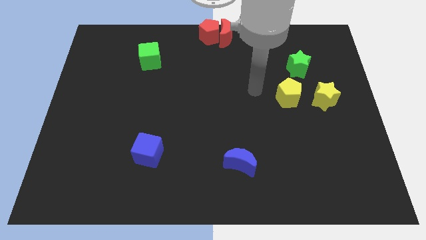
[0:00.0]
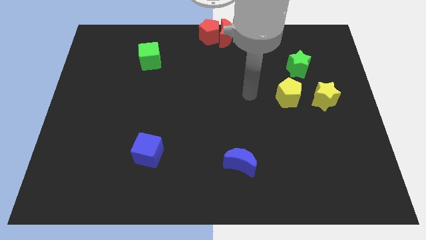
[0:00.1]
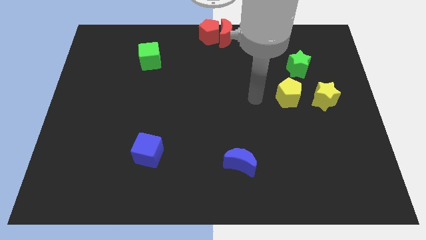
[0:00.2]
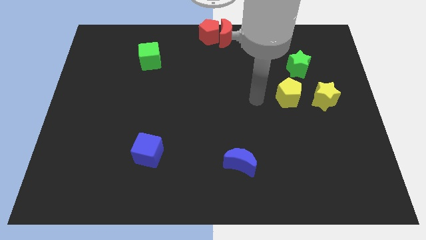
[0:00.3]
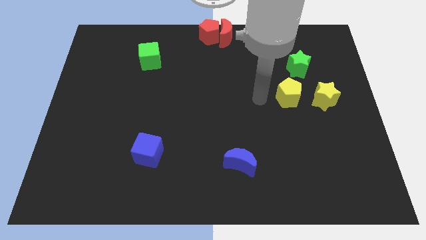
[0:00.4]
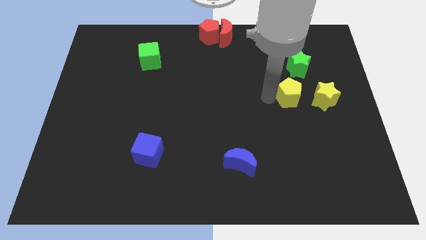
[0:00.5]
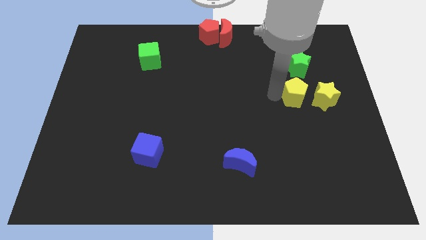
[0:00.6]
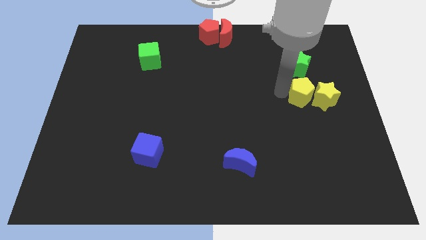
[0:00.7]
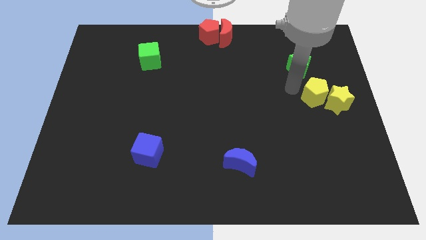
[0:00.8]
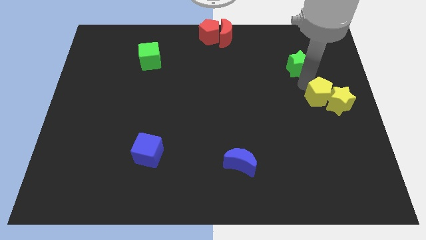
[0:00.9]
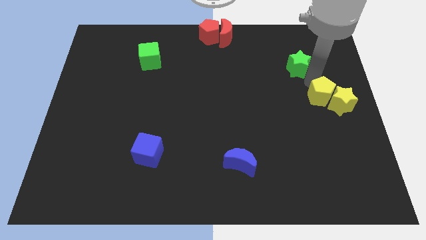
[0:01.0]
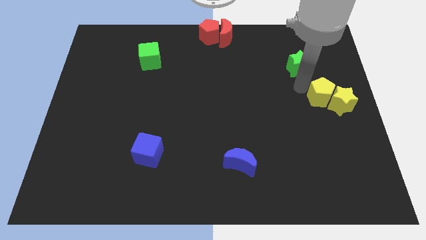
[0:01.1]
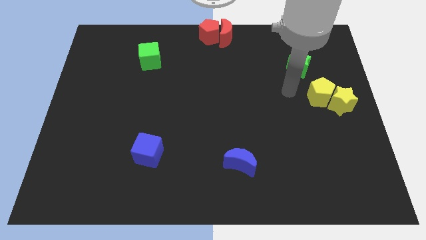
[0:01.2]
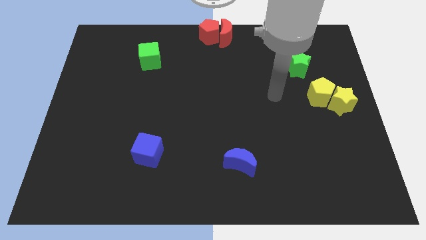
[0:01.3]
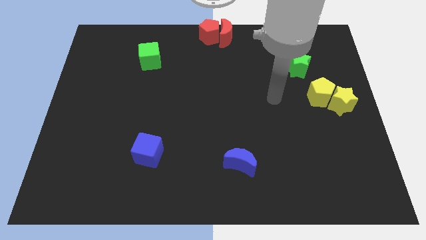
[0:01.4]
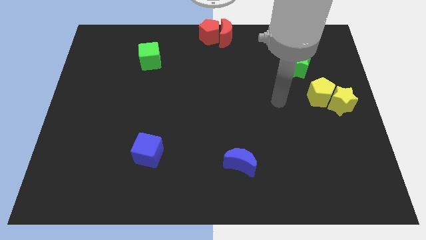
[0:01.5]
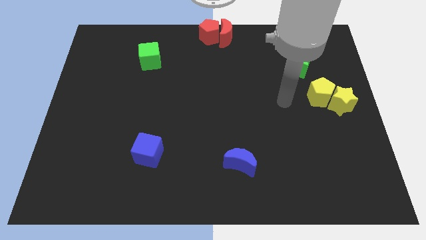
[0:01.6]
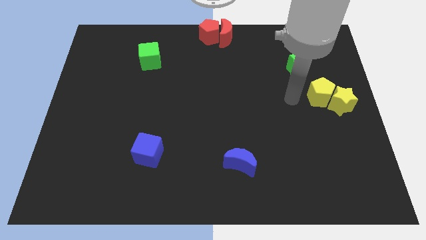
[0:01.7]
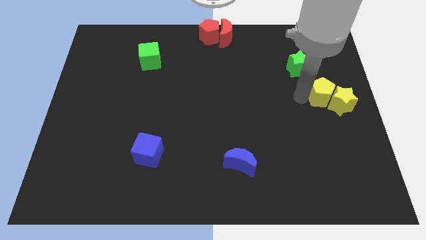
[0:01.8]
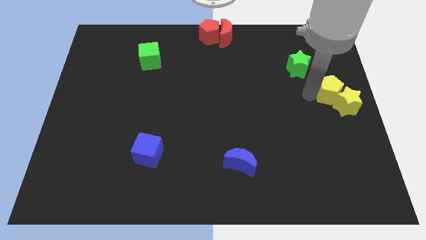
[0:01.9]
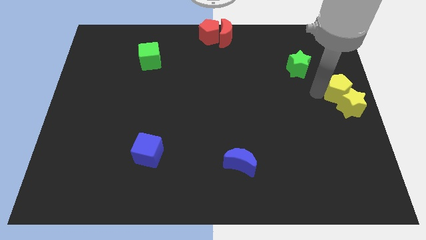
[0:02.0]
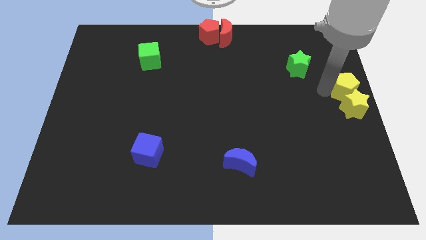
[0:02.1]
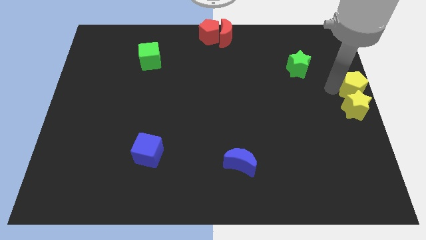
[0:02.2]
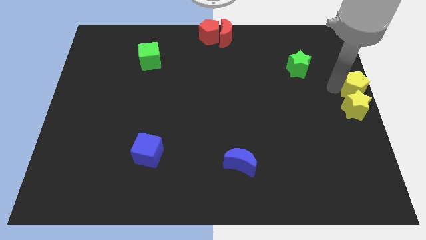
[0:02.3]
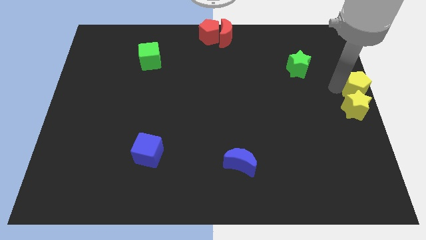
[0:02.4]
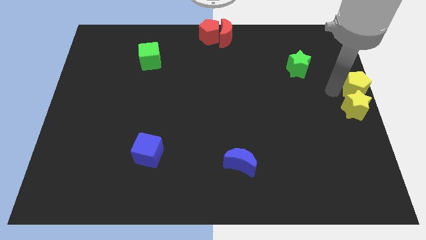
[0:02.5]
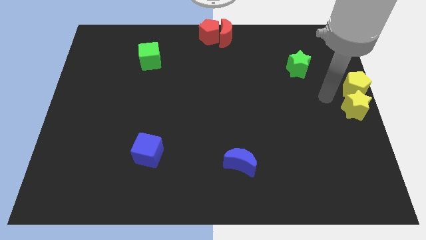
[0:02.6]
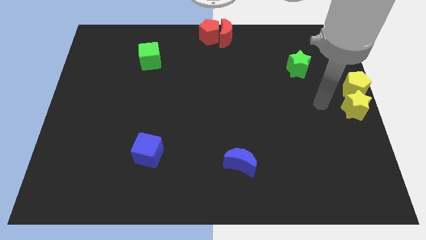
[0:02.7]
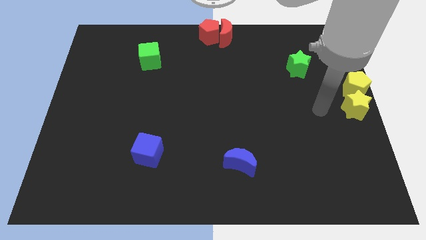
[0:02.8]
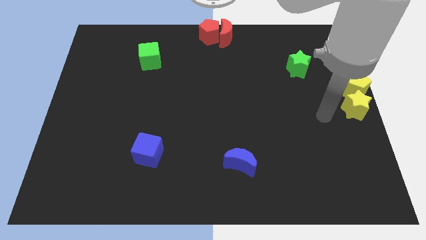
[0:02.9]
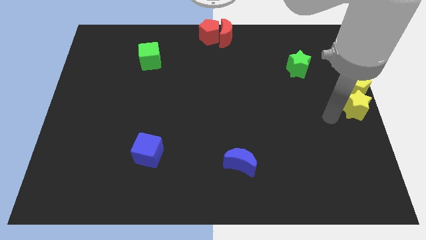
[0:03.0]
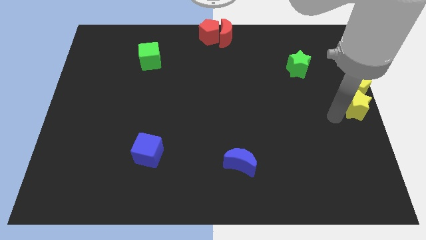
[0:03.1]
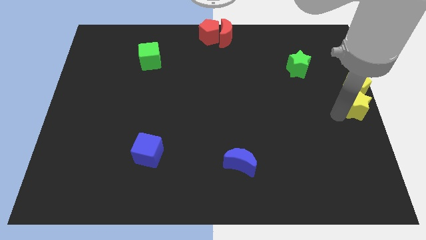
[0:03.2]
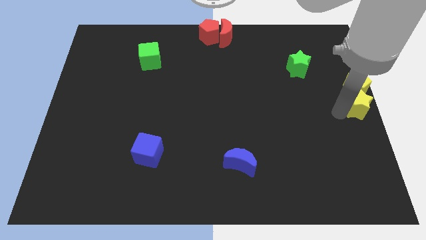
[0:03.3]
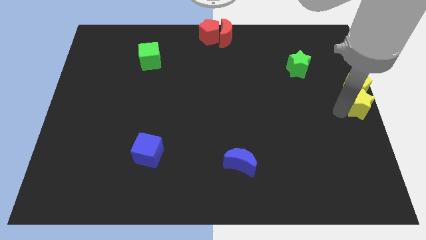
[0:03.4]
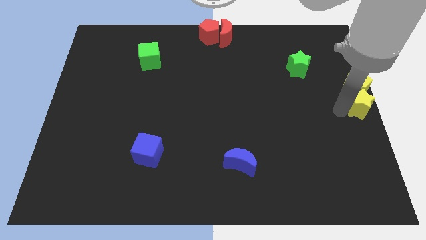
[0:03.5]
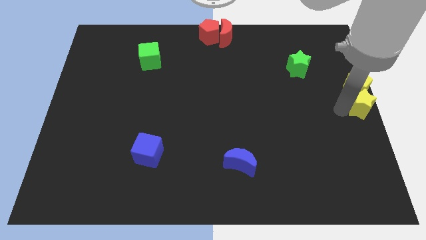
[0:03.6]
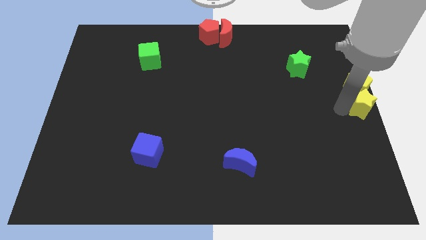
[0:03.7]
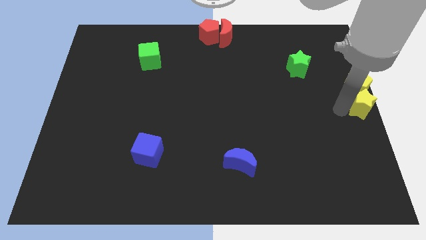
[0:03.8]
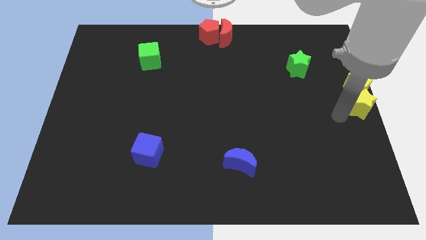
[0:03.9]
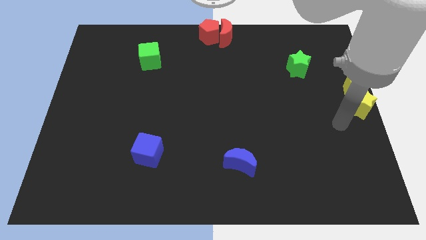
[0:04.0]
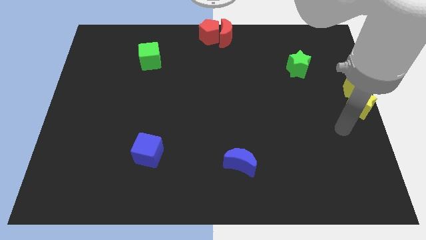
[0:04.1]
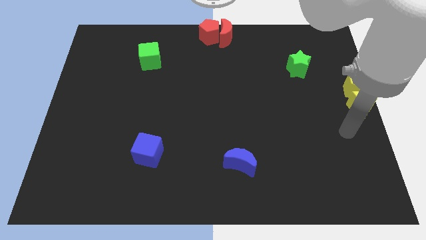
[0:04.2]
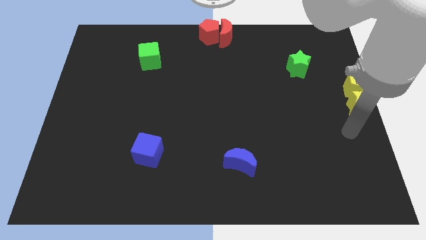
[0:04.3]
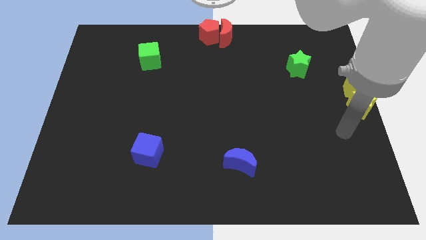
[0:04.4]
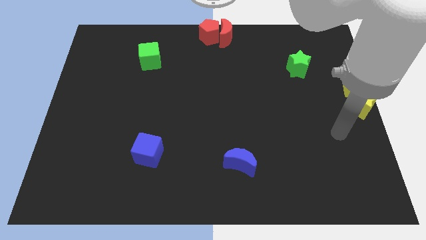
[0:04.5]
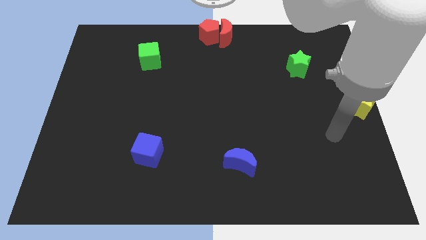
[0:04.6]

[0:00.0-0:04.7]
move the yellow blocks to the right center of the board

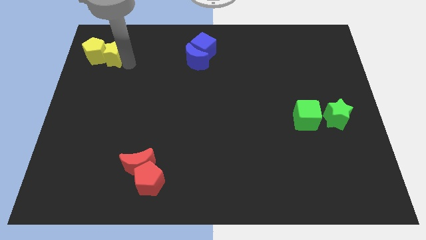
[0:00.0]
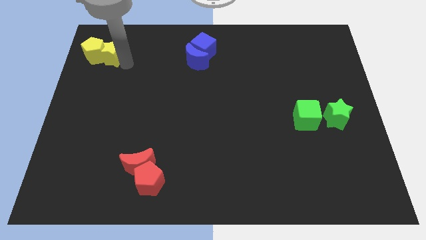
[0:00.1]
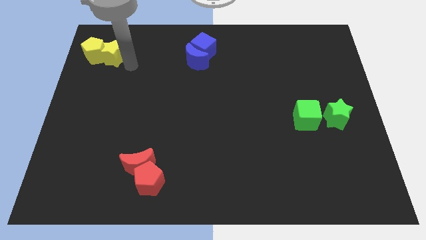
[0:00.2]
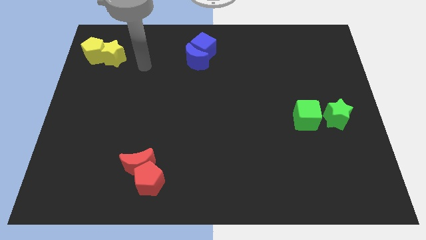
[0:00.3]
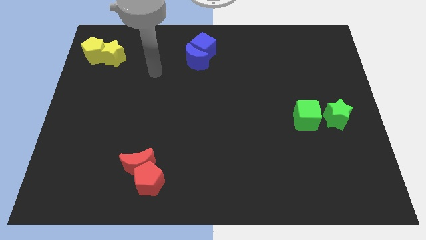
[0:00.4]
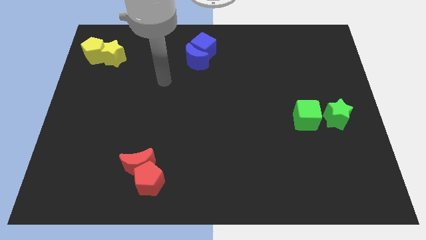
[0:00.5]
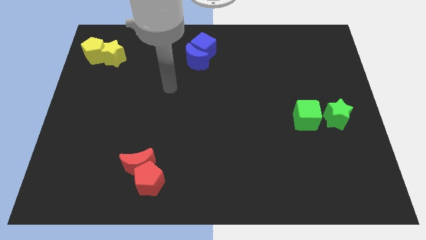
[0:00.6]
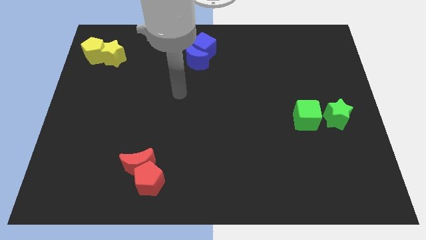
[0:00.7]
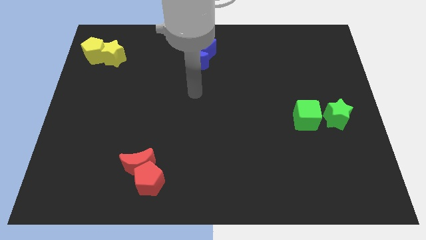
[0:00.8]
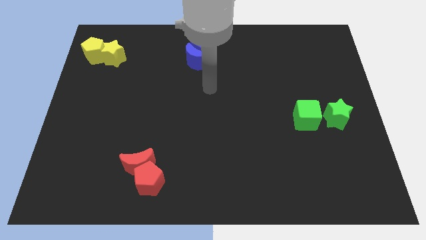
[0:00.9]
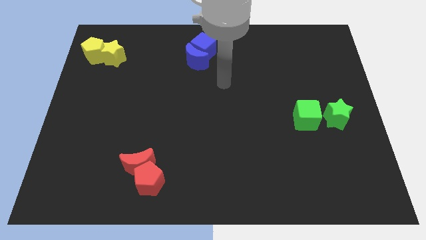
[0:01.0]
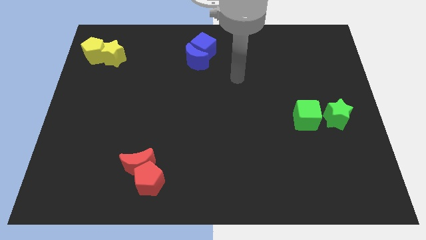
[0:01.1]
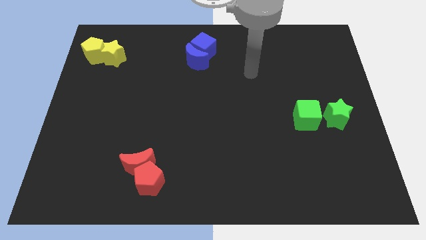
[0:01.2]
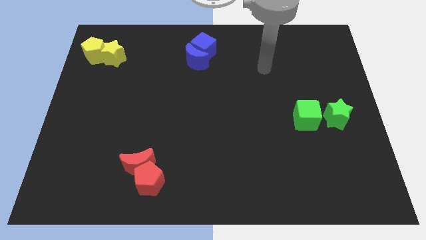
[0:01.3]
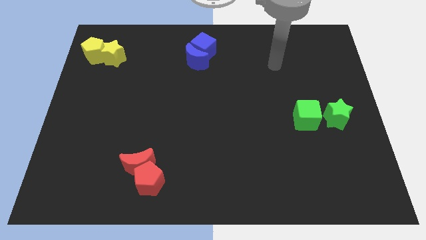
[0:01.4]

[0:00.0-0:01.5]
move away from the yellow star

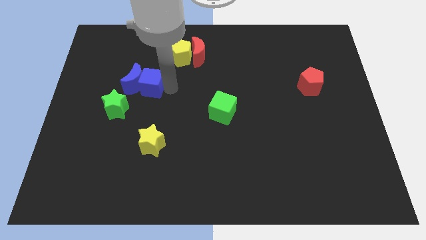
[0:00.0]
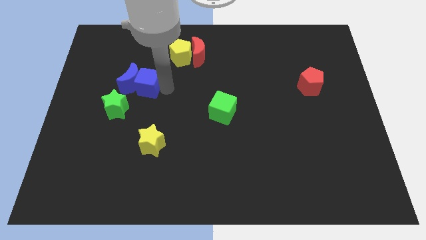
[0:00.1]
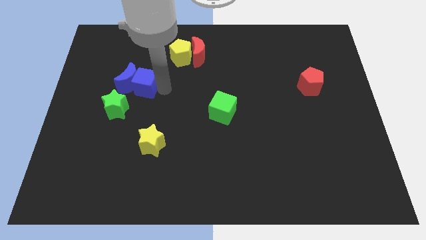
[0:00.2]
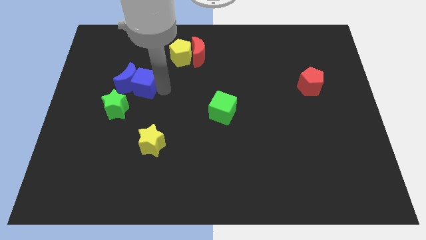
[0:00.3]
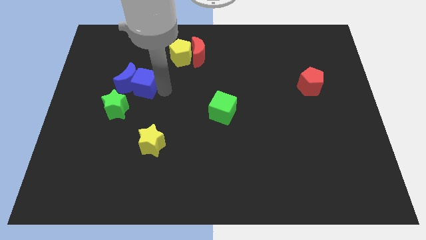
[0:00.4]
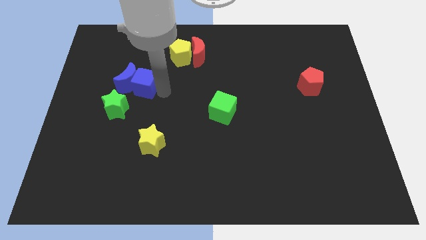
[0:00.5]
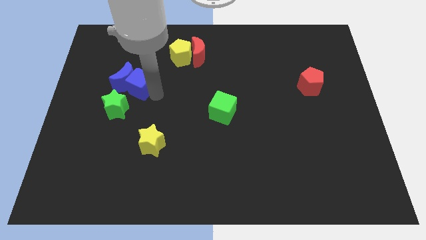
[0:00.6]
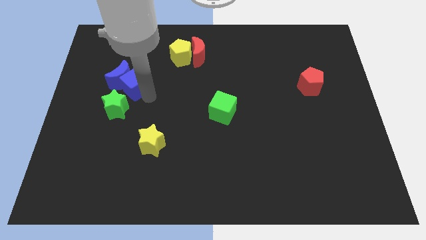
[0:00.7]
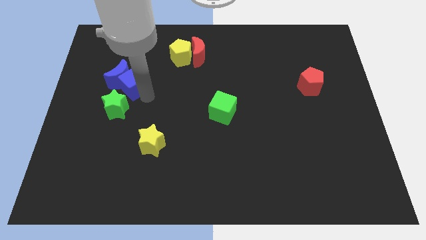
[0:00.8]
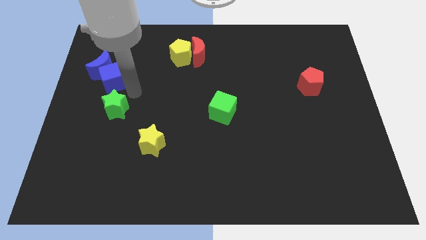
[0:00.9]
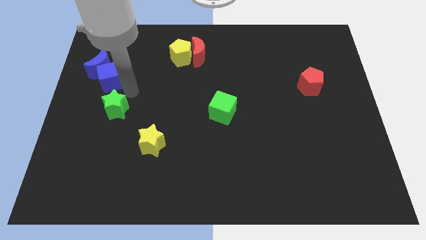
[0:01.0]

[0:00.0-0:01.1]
place blue blocks diagonally to the top left of green star

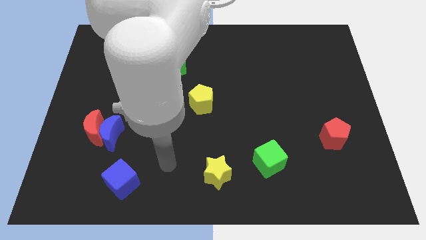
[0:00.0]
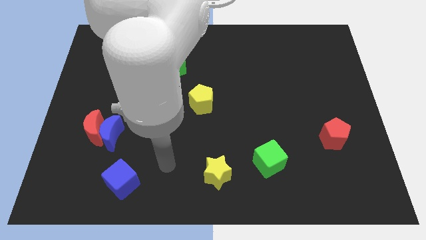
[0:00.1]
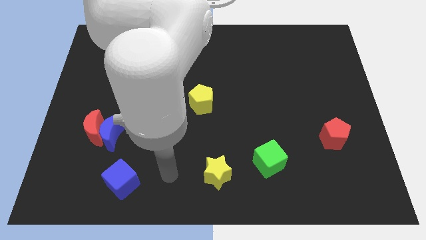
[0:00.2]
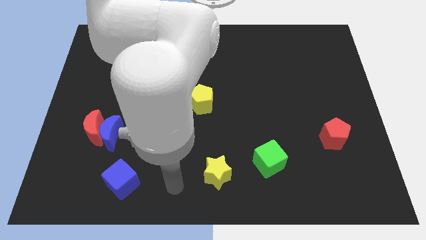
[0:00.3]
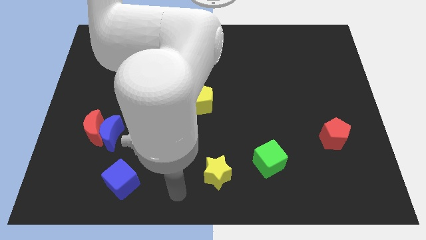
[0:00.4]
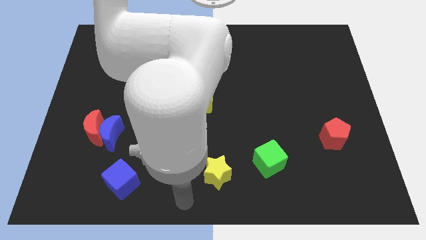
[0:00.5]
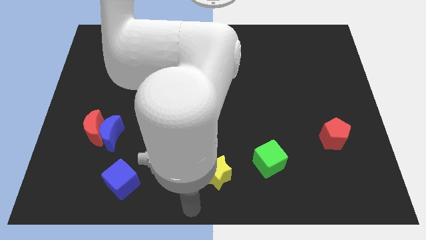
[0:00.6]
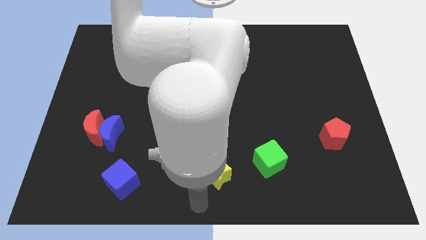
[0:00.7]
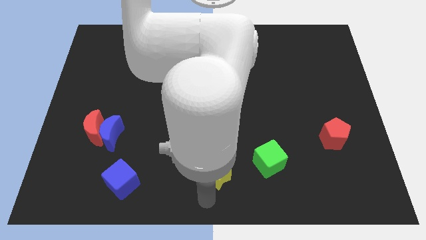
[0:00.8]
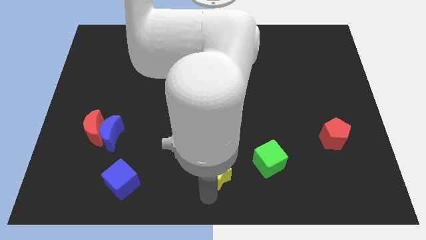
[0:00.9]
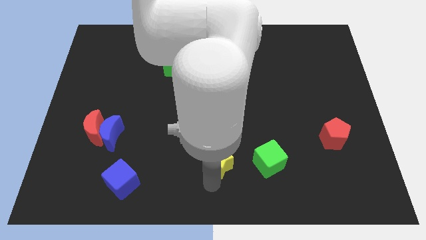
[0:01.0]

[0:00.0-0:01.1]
put your arm vertically below the yellow star

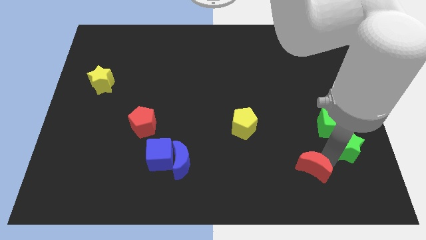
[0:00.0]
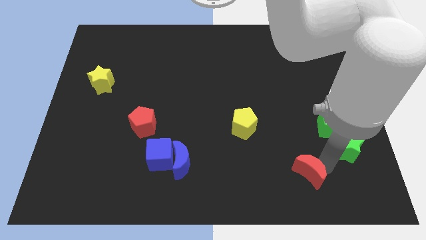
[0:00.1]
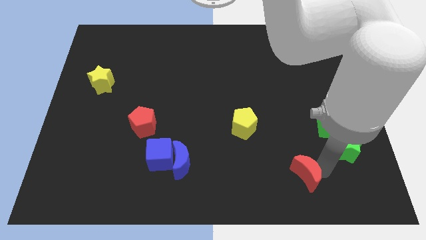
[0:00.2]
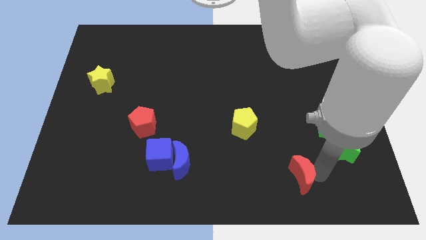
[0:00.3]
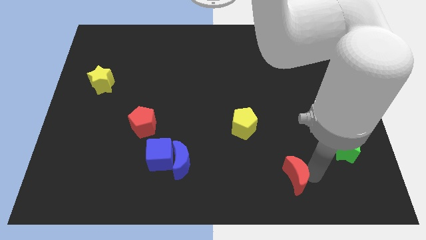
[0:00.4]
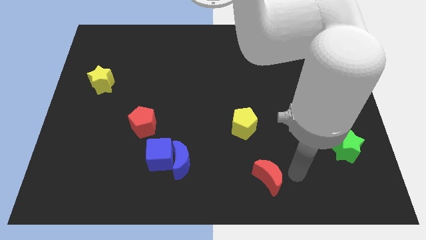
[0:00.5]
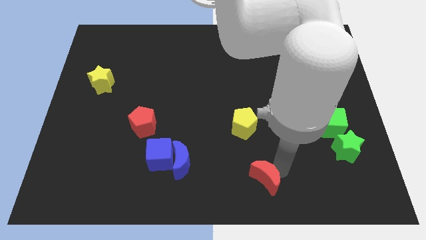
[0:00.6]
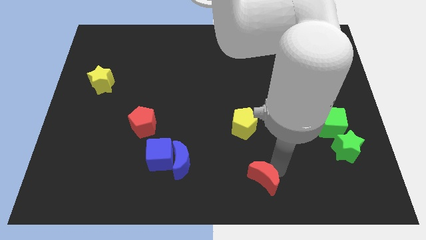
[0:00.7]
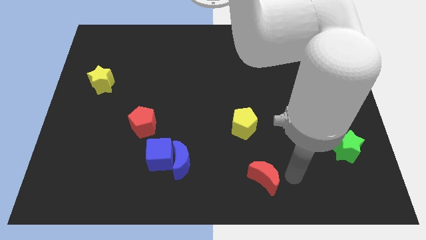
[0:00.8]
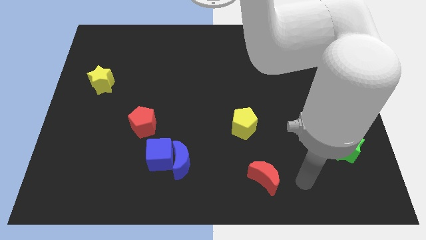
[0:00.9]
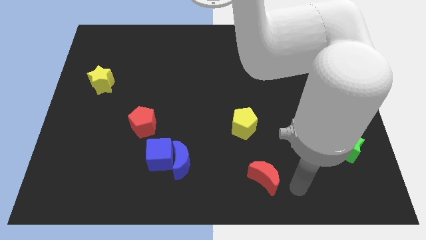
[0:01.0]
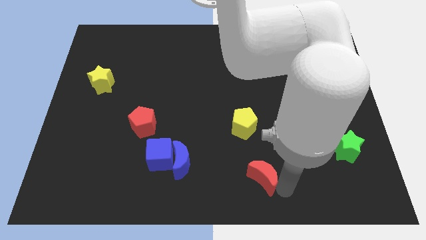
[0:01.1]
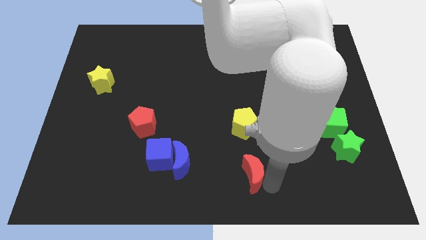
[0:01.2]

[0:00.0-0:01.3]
place the red crescent vertically below the yellow pentagon
